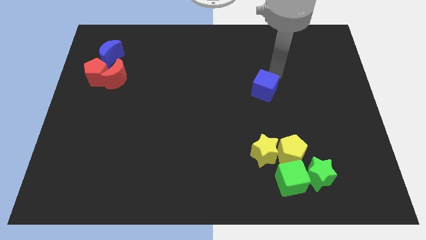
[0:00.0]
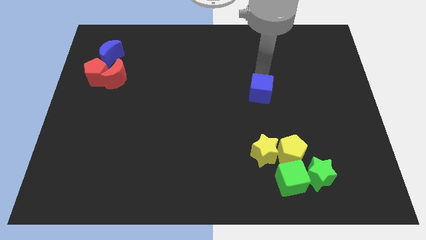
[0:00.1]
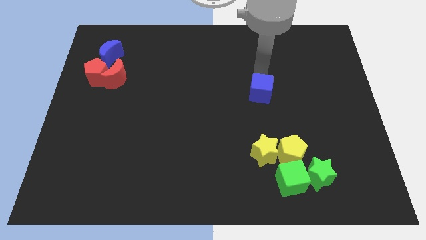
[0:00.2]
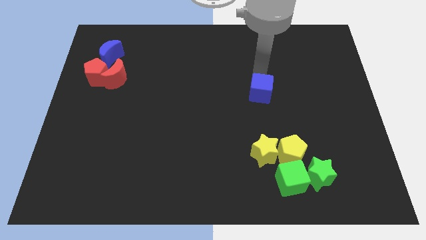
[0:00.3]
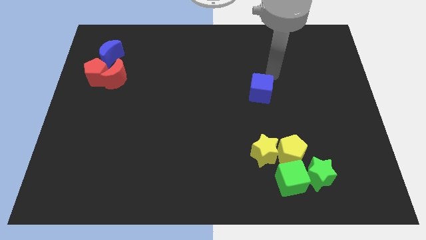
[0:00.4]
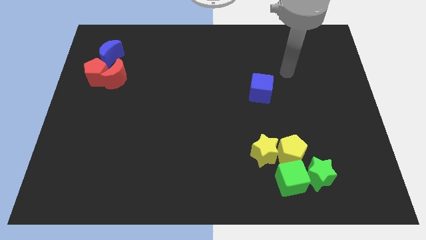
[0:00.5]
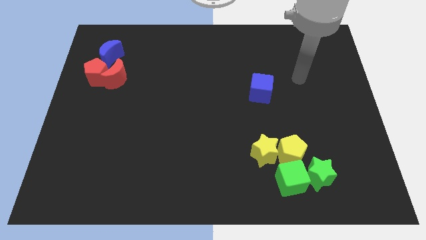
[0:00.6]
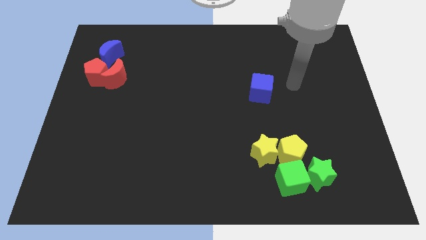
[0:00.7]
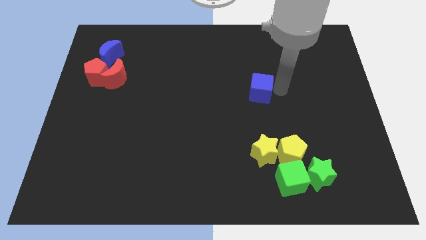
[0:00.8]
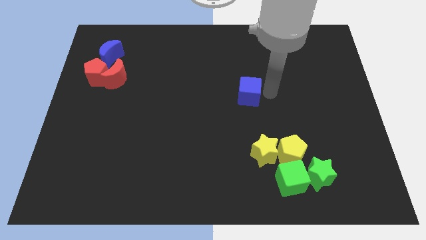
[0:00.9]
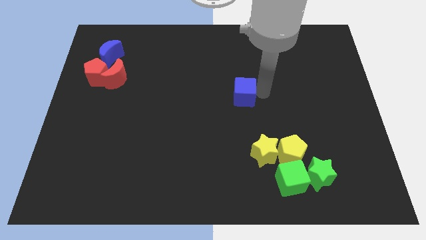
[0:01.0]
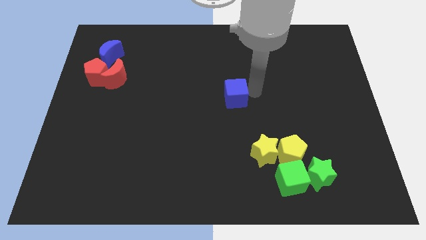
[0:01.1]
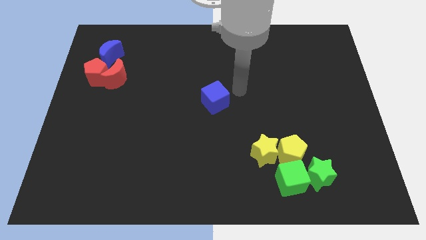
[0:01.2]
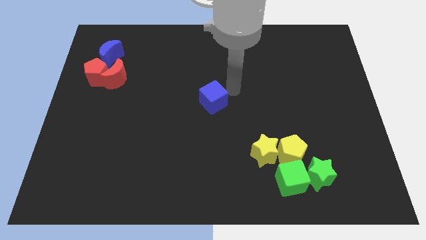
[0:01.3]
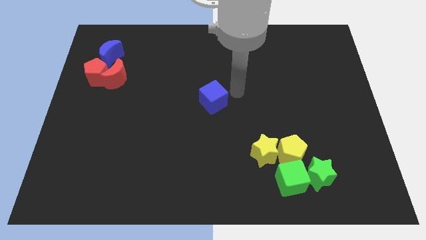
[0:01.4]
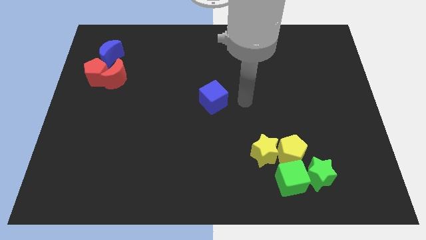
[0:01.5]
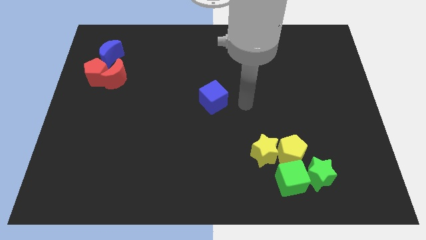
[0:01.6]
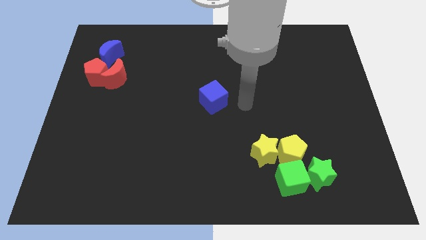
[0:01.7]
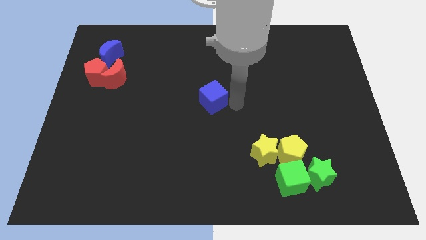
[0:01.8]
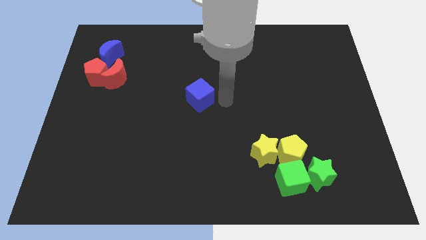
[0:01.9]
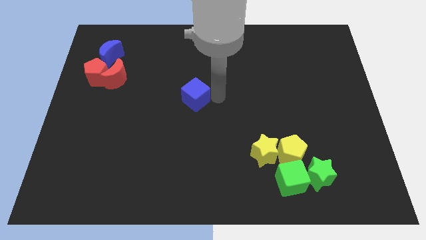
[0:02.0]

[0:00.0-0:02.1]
push blue cube to the center

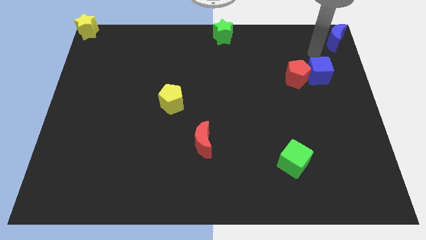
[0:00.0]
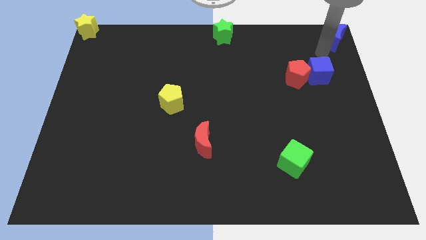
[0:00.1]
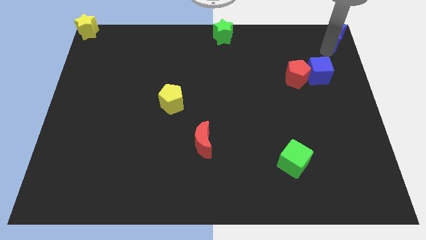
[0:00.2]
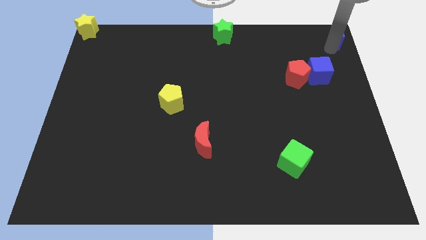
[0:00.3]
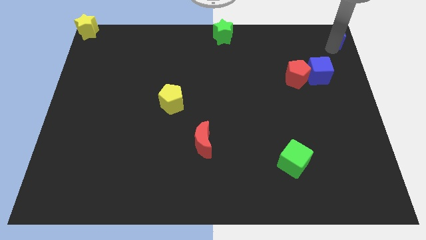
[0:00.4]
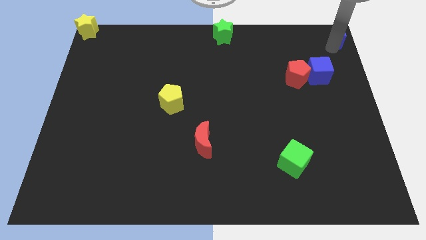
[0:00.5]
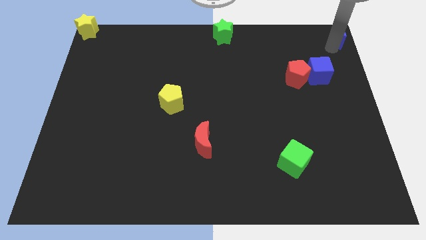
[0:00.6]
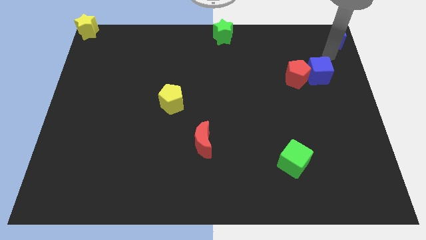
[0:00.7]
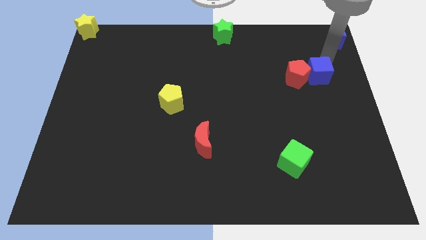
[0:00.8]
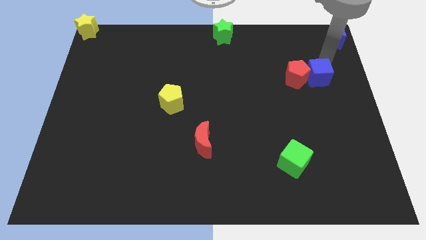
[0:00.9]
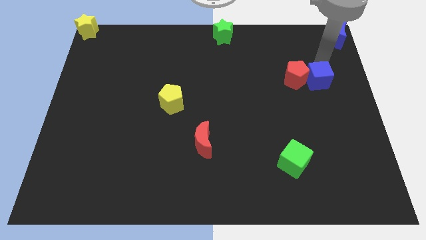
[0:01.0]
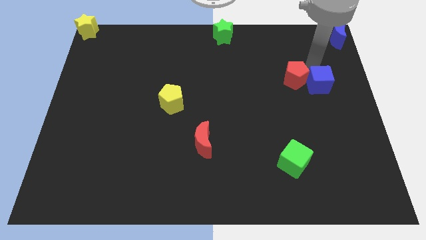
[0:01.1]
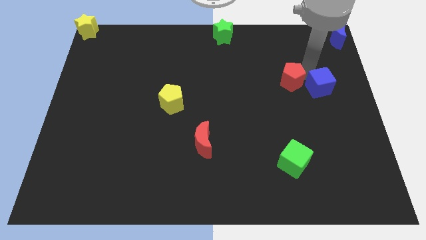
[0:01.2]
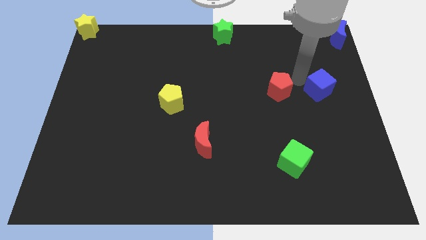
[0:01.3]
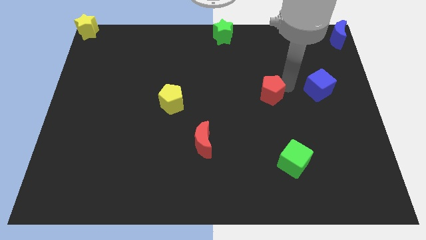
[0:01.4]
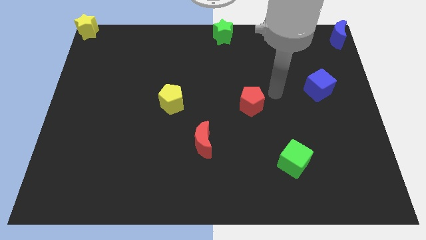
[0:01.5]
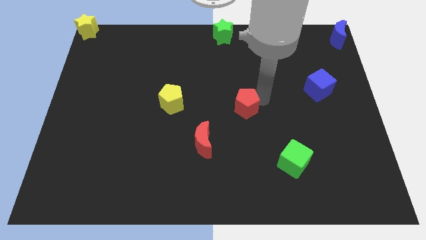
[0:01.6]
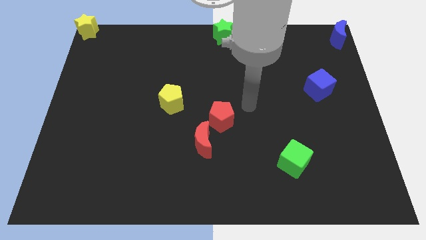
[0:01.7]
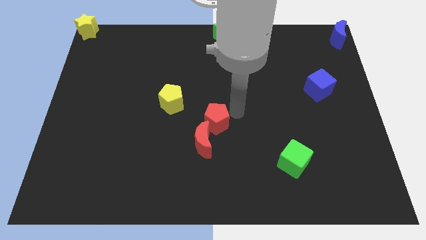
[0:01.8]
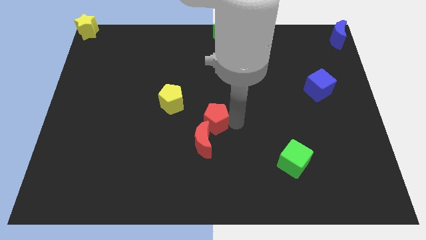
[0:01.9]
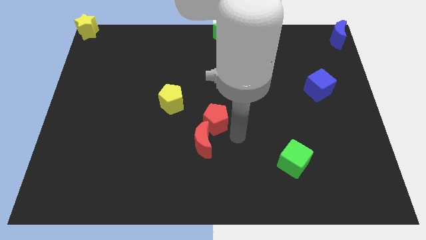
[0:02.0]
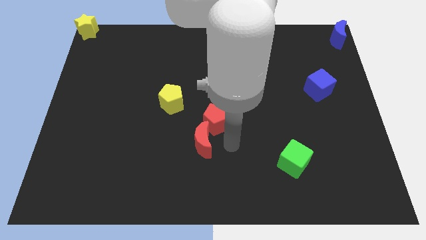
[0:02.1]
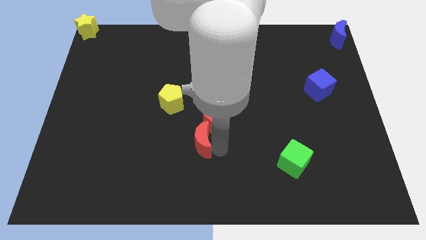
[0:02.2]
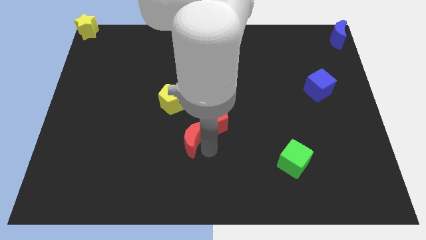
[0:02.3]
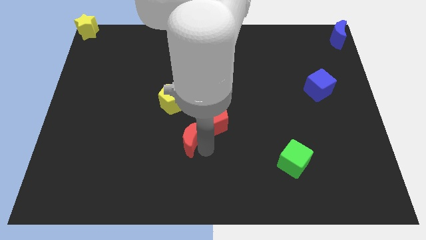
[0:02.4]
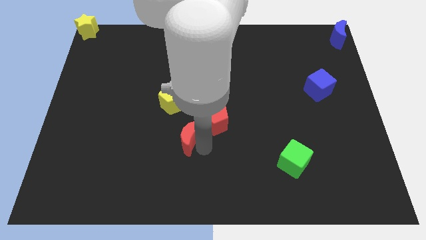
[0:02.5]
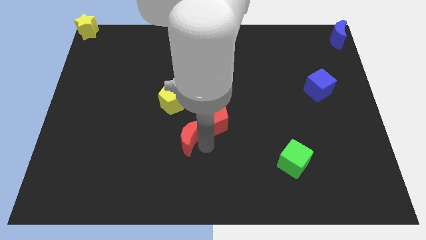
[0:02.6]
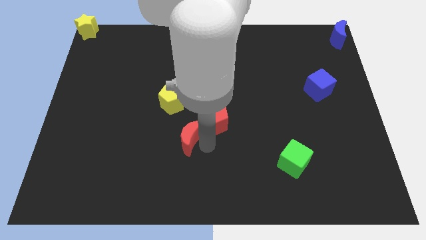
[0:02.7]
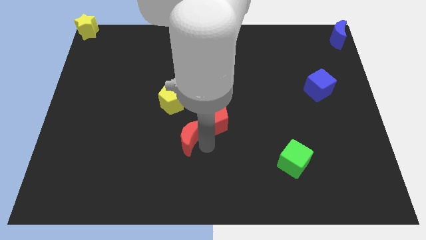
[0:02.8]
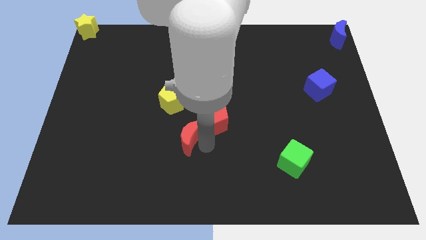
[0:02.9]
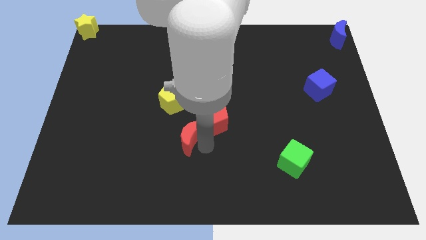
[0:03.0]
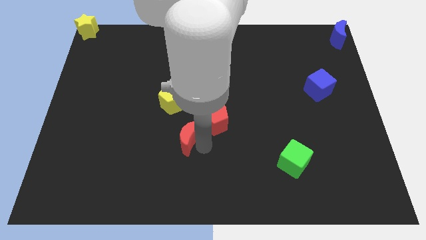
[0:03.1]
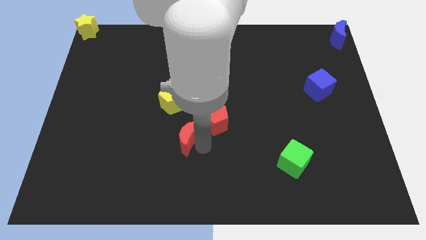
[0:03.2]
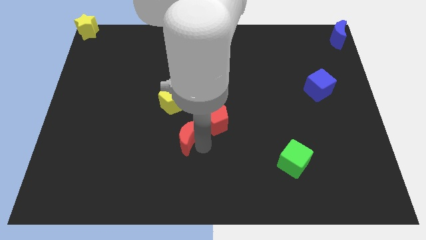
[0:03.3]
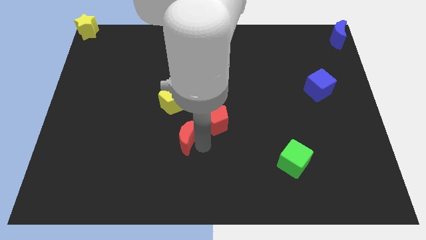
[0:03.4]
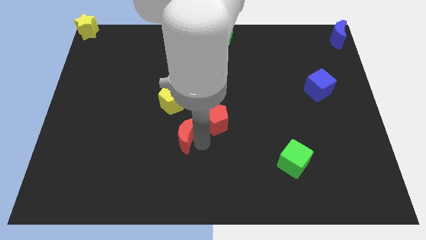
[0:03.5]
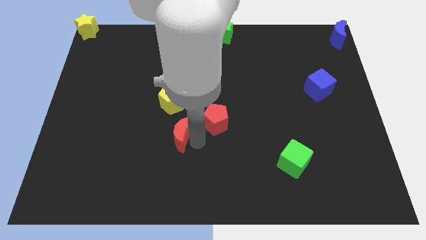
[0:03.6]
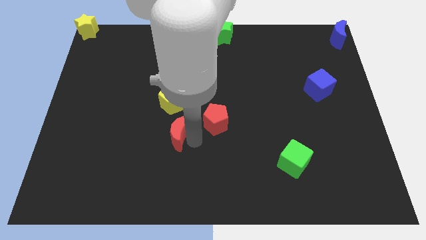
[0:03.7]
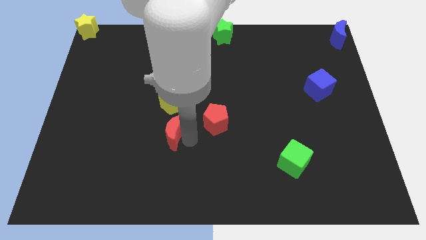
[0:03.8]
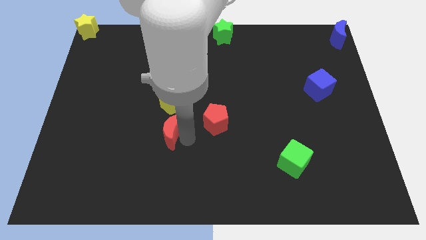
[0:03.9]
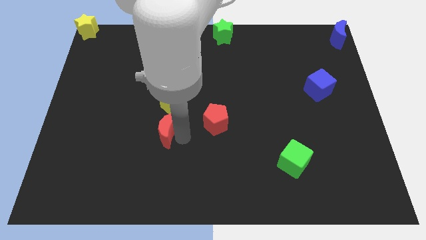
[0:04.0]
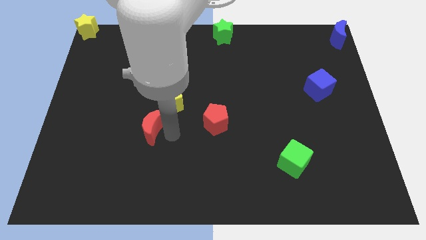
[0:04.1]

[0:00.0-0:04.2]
push the red pentagon into the red moon

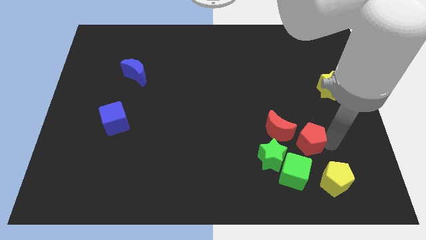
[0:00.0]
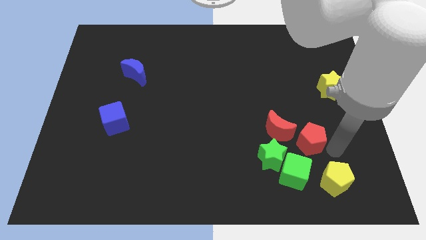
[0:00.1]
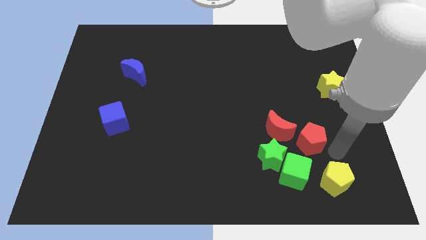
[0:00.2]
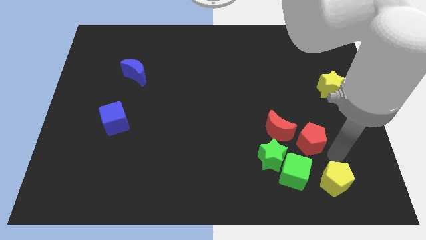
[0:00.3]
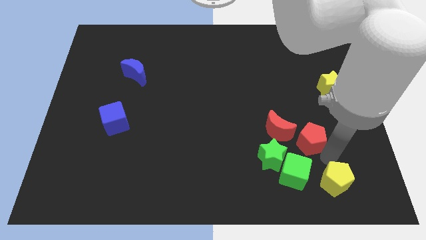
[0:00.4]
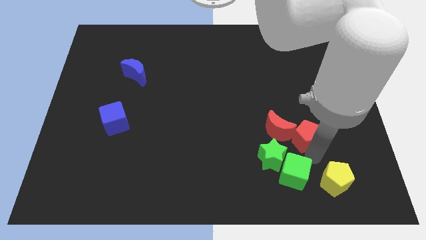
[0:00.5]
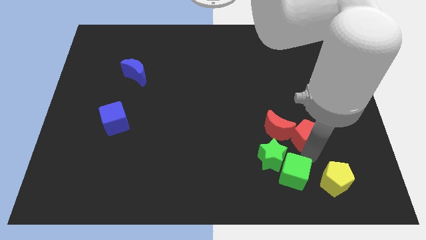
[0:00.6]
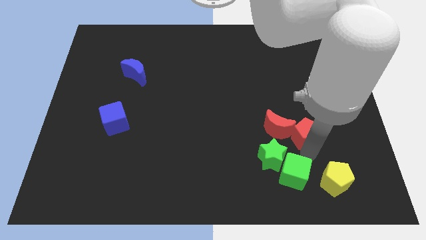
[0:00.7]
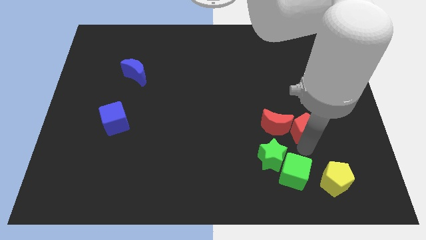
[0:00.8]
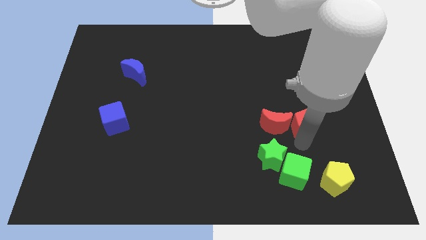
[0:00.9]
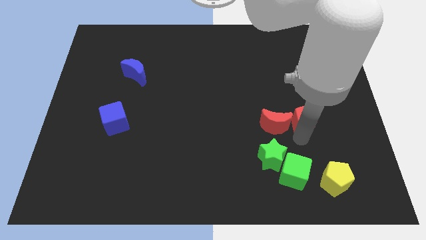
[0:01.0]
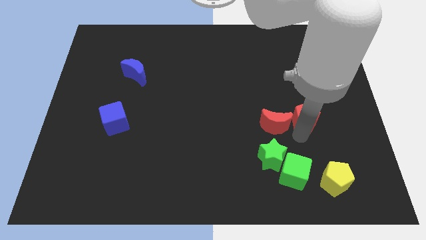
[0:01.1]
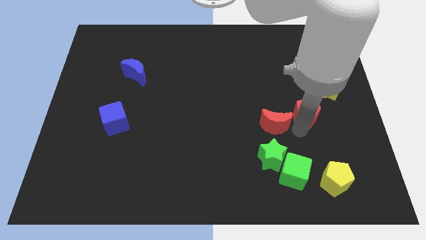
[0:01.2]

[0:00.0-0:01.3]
push red pentagon into the red moon

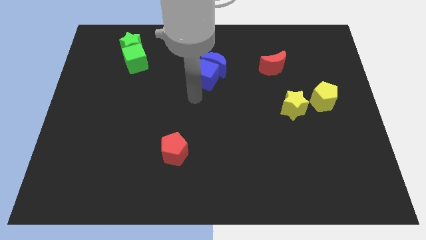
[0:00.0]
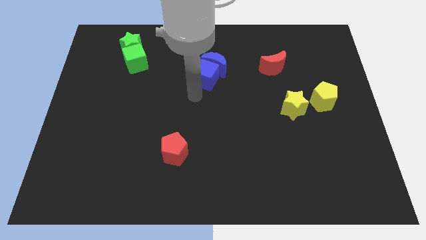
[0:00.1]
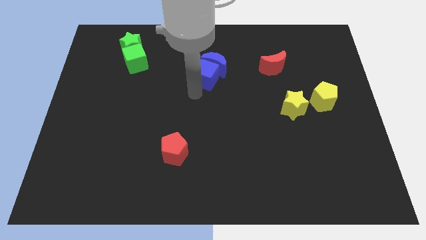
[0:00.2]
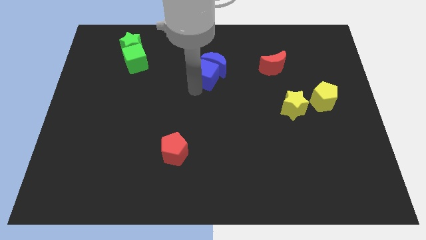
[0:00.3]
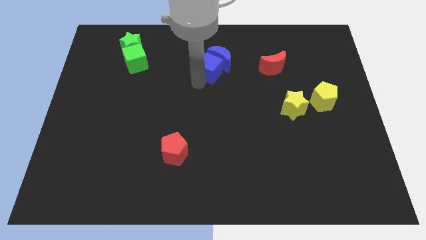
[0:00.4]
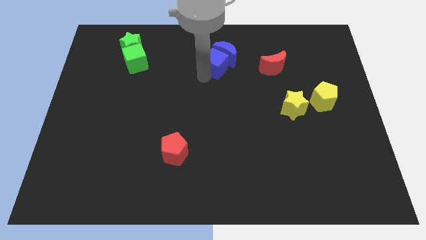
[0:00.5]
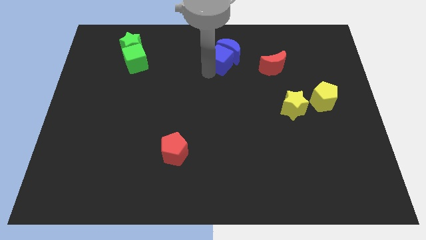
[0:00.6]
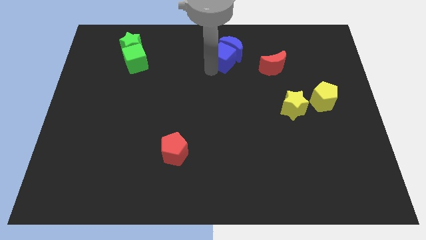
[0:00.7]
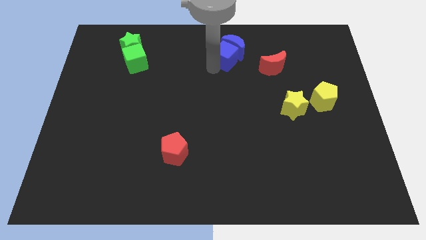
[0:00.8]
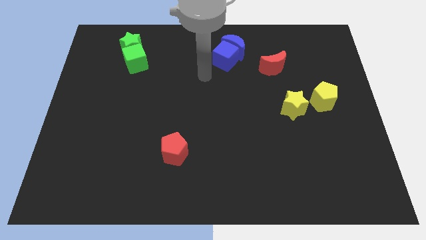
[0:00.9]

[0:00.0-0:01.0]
move the group of blue blocks towards the top center

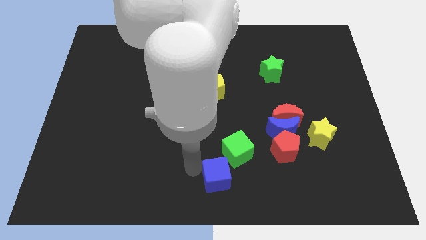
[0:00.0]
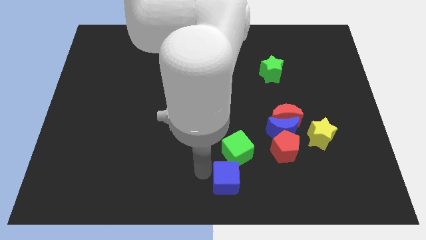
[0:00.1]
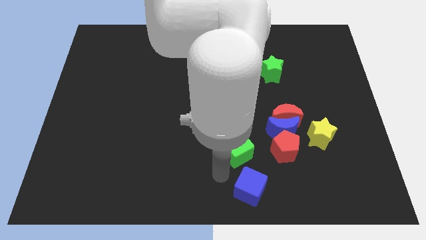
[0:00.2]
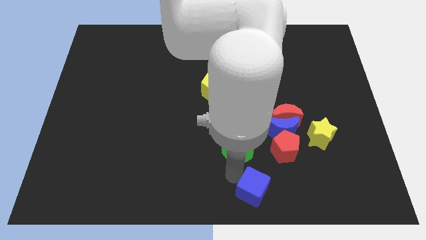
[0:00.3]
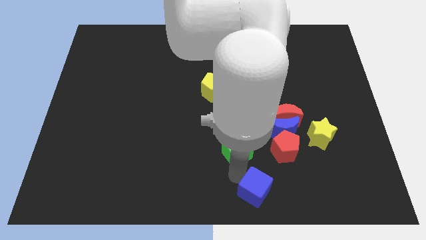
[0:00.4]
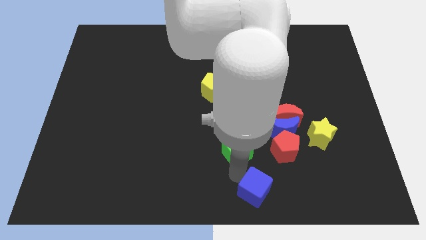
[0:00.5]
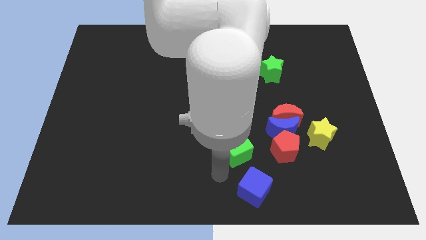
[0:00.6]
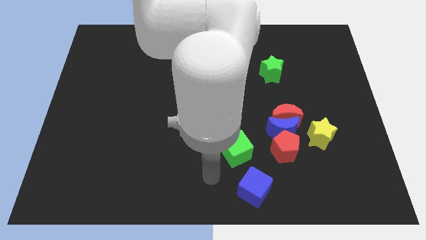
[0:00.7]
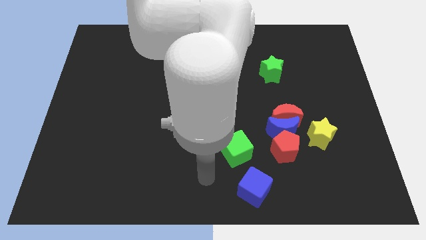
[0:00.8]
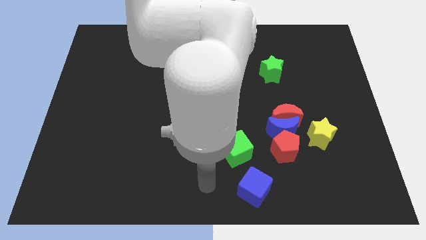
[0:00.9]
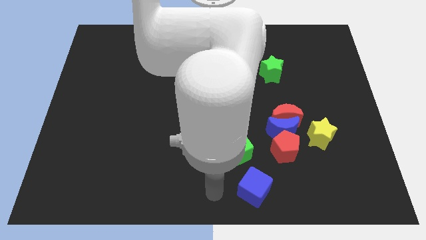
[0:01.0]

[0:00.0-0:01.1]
move the blue cube to the right of the board
